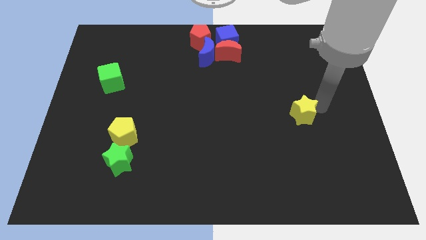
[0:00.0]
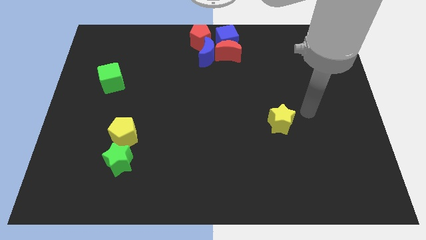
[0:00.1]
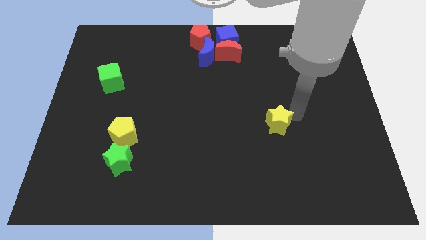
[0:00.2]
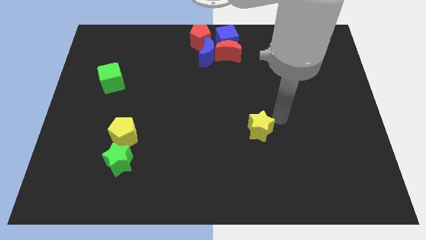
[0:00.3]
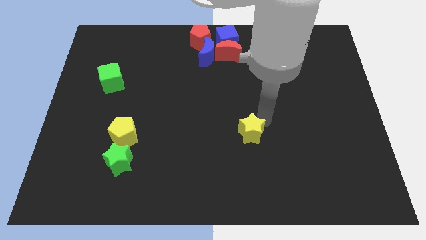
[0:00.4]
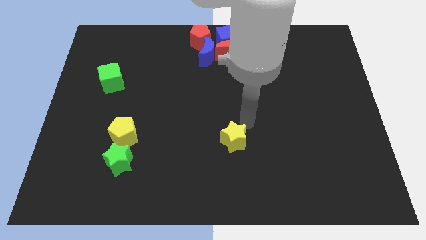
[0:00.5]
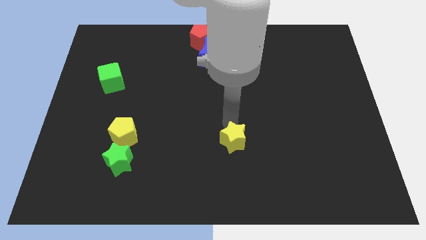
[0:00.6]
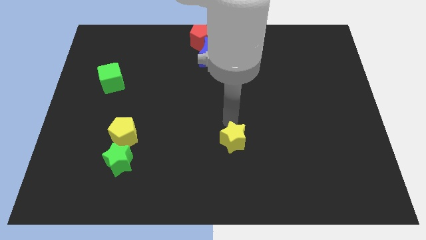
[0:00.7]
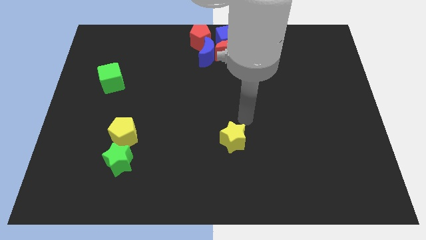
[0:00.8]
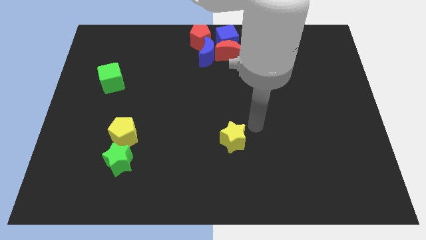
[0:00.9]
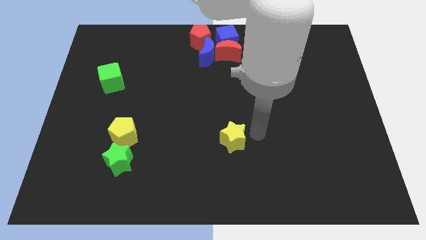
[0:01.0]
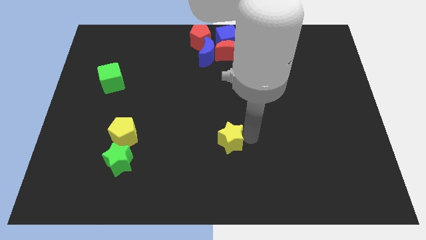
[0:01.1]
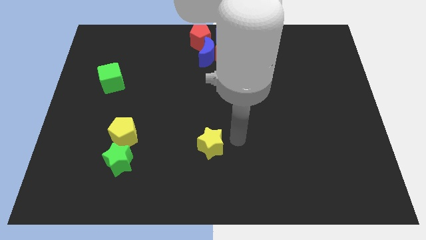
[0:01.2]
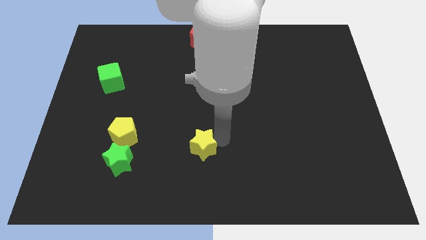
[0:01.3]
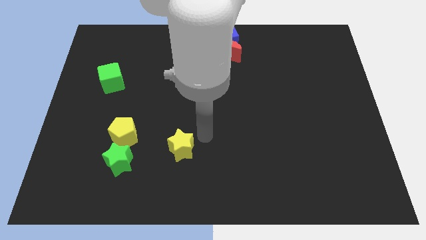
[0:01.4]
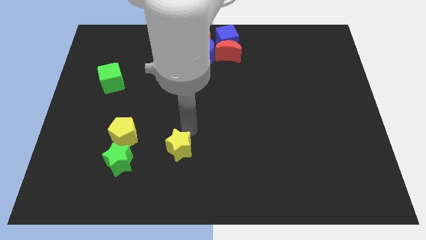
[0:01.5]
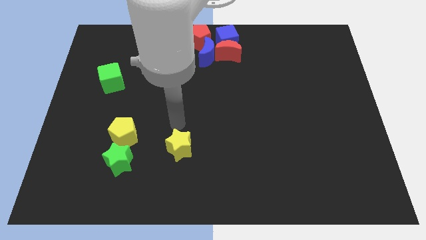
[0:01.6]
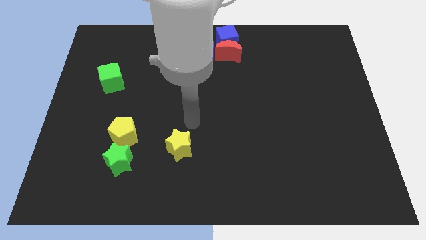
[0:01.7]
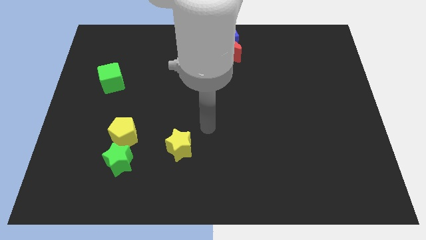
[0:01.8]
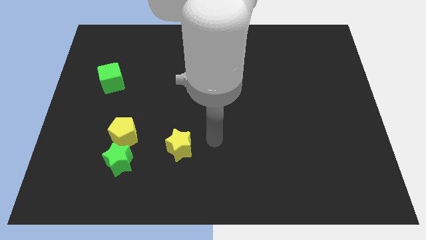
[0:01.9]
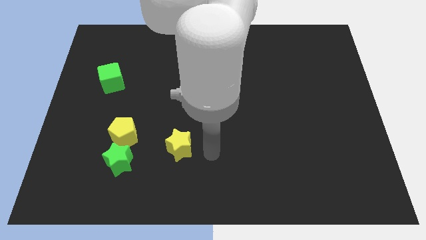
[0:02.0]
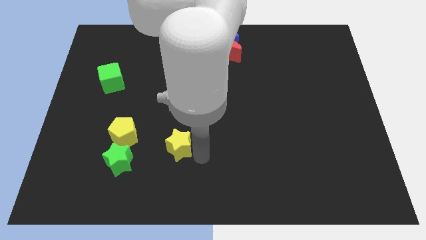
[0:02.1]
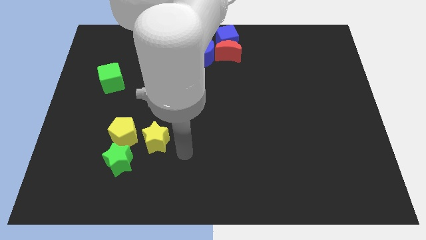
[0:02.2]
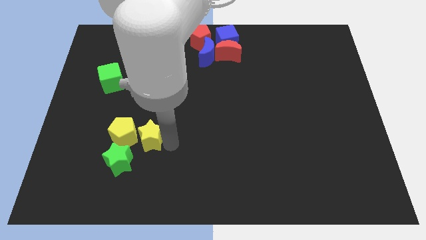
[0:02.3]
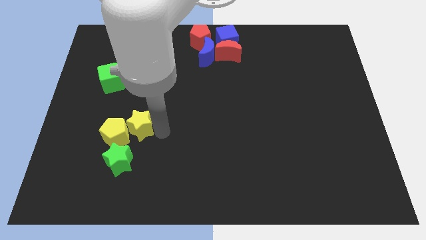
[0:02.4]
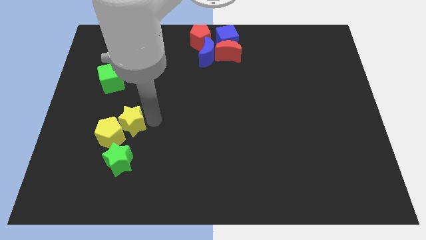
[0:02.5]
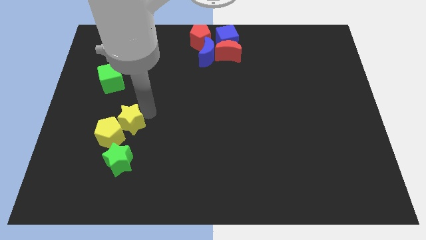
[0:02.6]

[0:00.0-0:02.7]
drag the yellow star close to the yellow pentagon

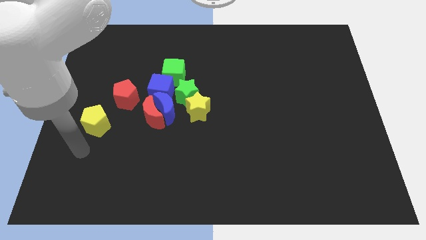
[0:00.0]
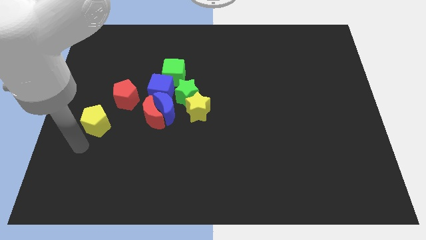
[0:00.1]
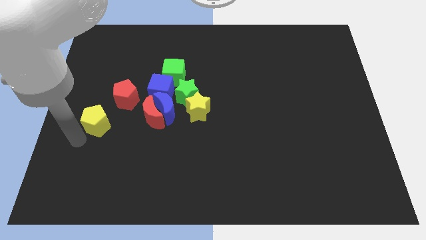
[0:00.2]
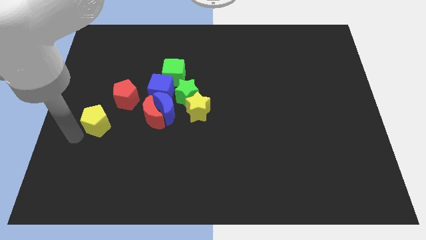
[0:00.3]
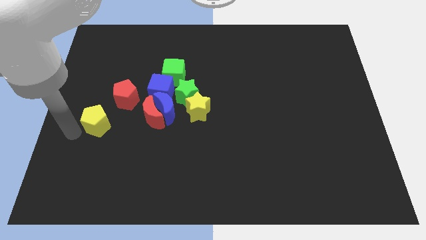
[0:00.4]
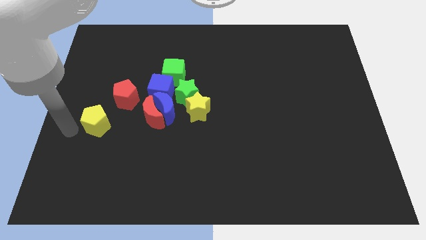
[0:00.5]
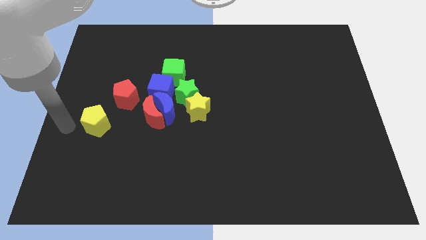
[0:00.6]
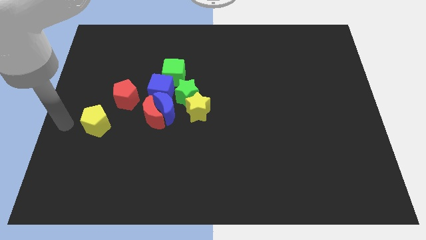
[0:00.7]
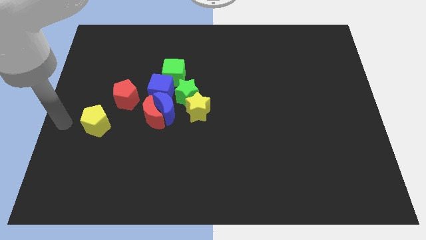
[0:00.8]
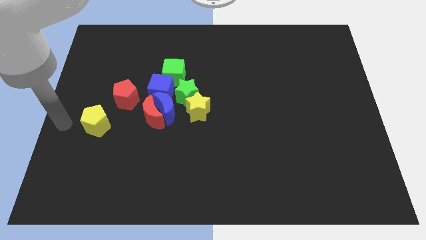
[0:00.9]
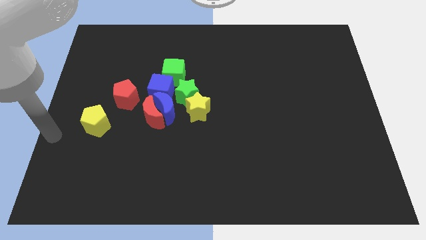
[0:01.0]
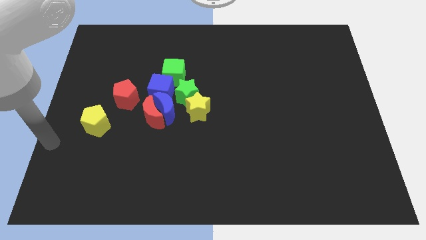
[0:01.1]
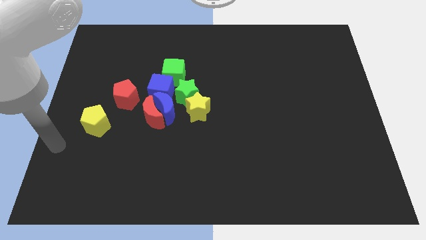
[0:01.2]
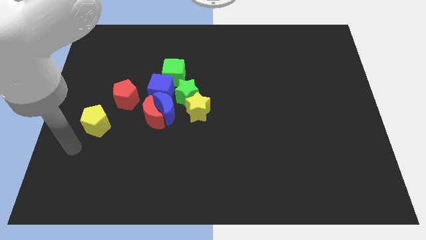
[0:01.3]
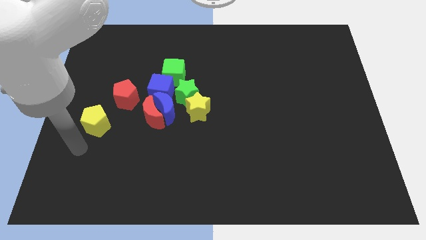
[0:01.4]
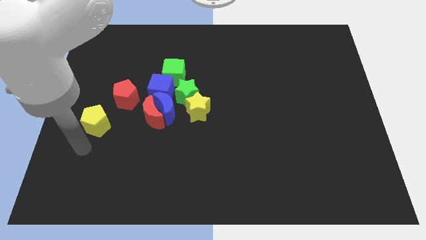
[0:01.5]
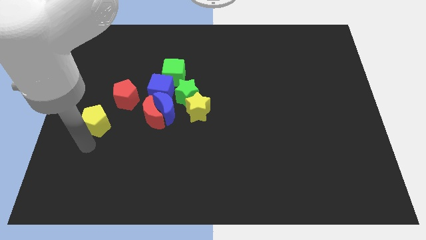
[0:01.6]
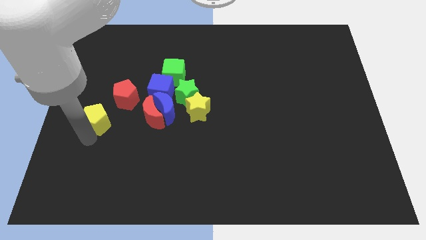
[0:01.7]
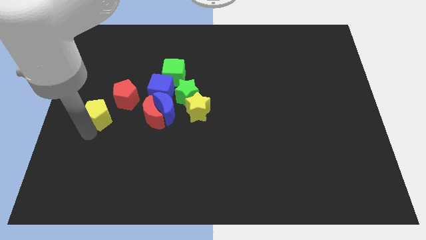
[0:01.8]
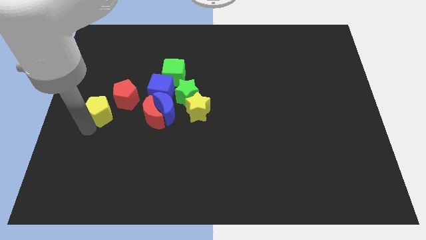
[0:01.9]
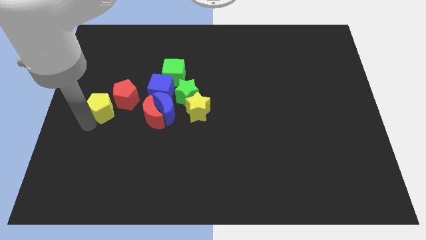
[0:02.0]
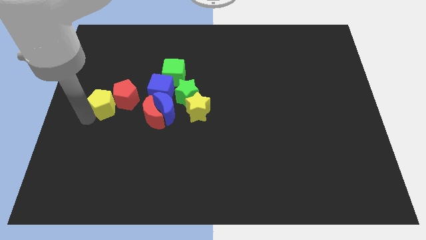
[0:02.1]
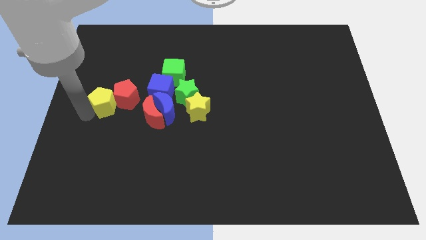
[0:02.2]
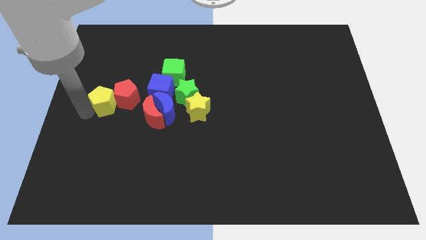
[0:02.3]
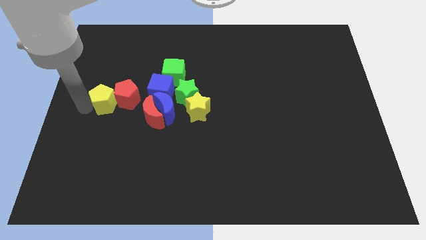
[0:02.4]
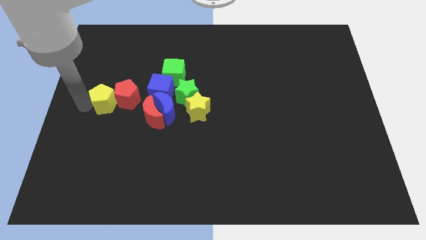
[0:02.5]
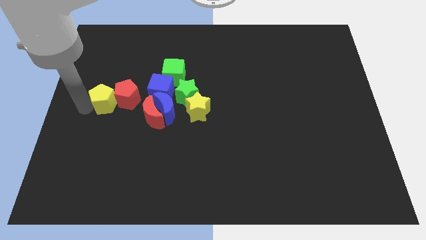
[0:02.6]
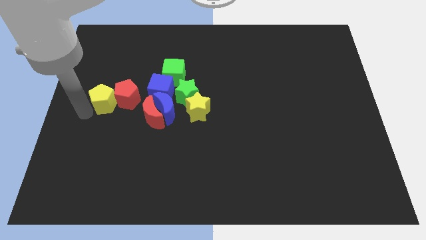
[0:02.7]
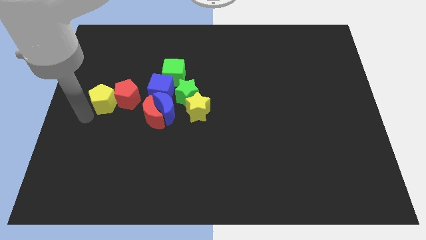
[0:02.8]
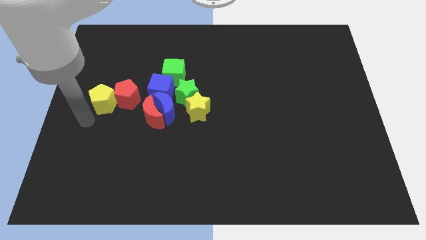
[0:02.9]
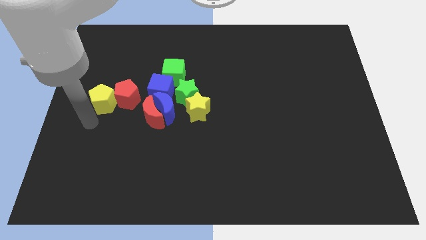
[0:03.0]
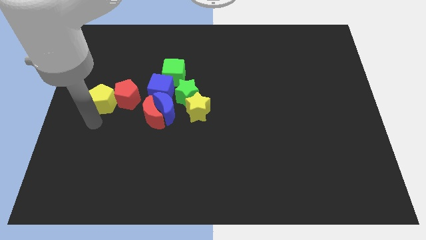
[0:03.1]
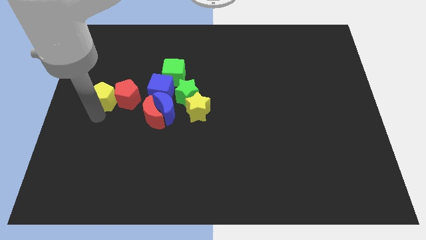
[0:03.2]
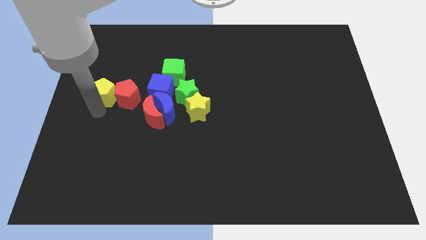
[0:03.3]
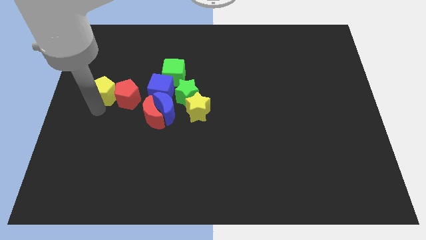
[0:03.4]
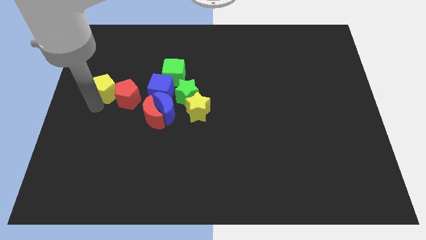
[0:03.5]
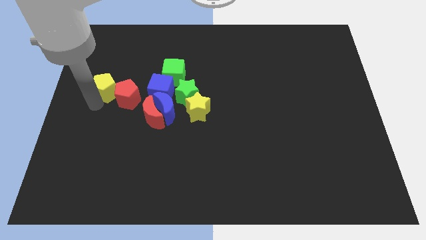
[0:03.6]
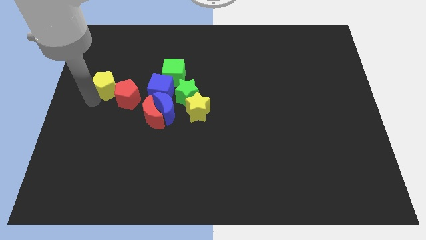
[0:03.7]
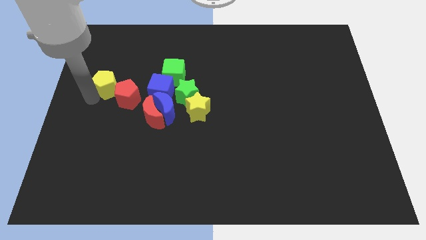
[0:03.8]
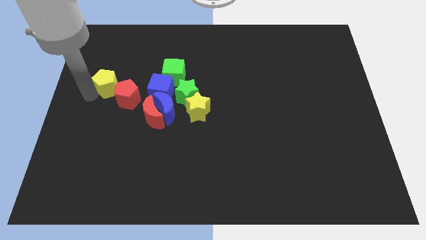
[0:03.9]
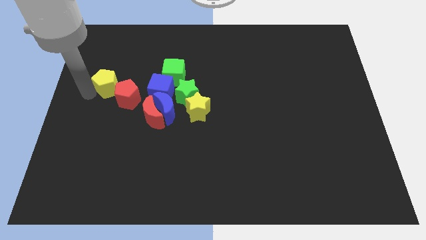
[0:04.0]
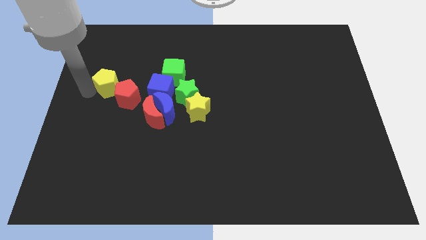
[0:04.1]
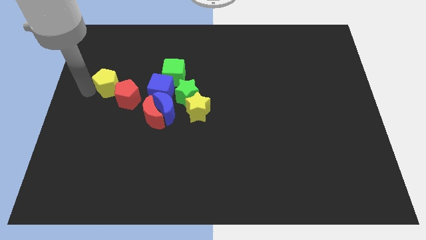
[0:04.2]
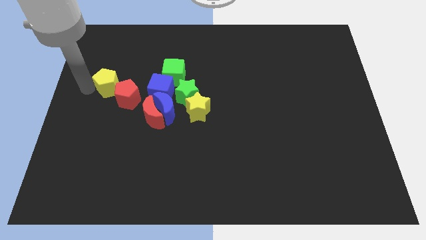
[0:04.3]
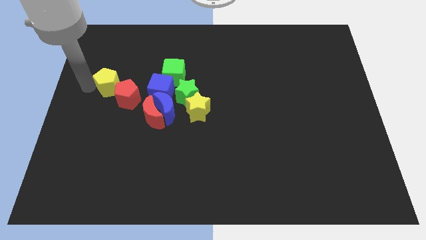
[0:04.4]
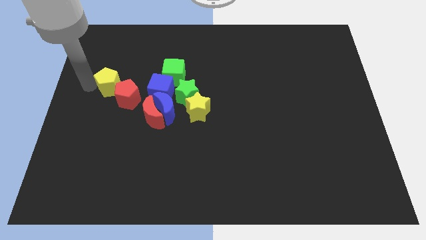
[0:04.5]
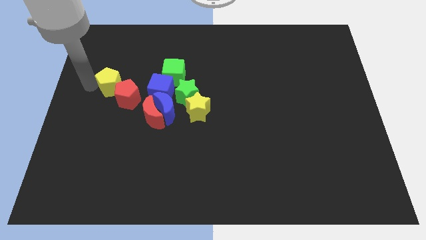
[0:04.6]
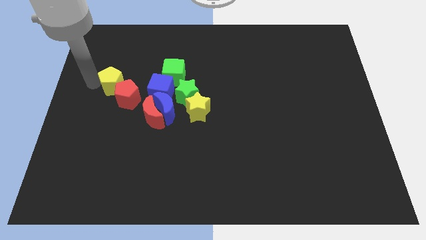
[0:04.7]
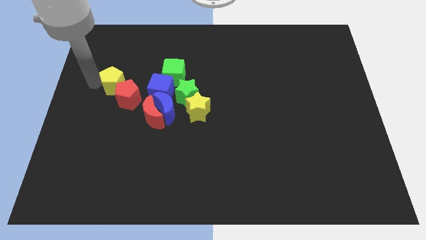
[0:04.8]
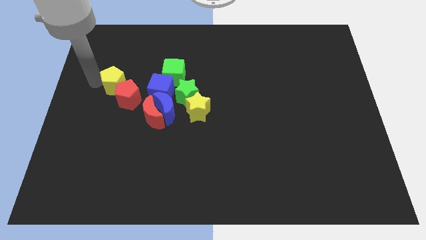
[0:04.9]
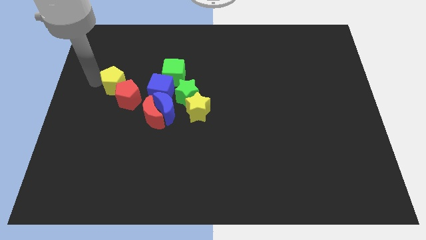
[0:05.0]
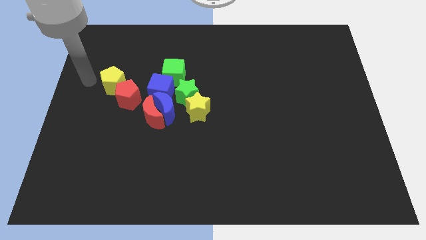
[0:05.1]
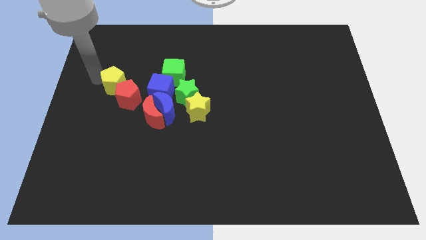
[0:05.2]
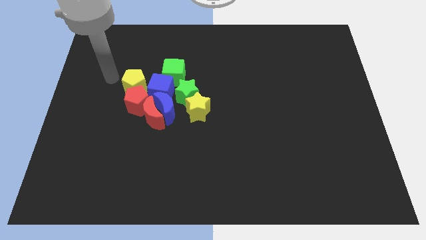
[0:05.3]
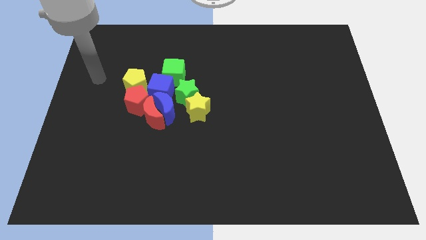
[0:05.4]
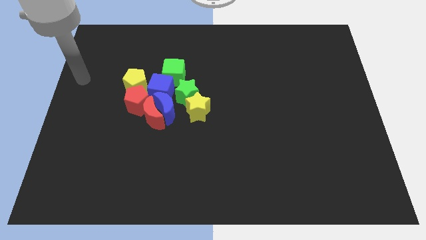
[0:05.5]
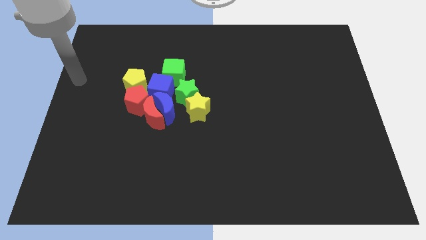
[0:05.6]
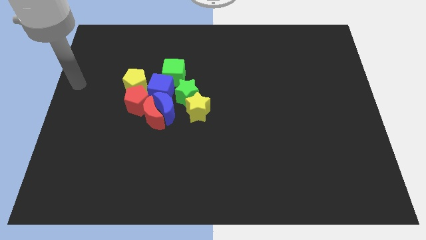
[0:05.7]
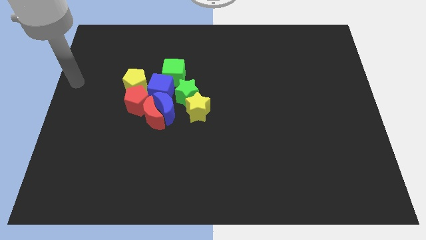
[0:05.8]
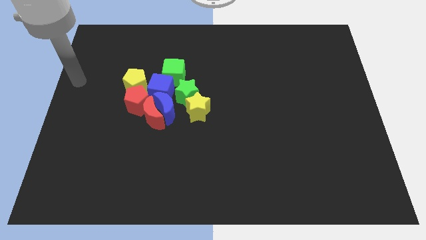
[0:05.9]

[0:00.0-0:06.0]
move the yellow pentagon above the red pentagon

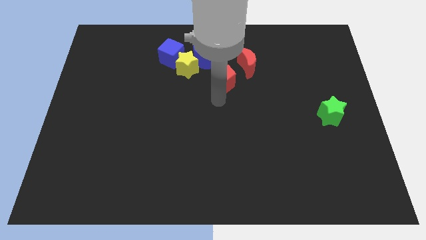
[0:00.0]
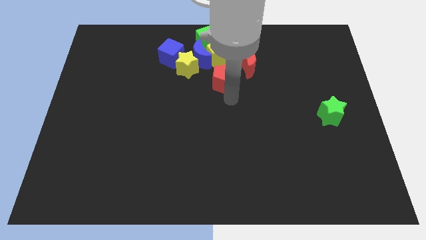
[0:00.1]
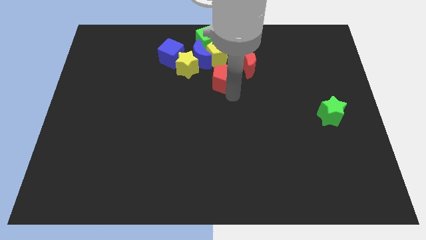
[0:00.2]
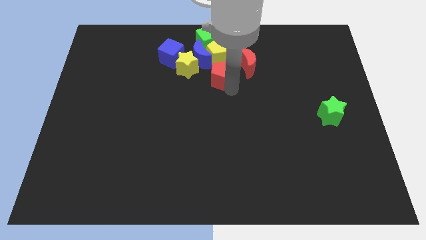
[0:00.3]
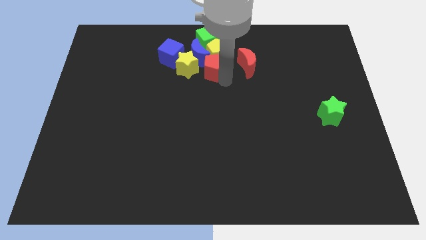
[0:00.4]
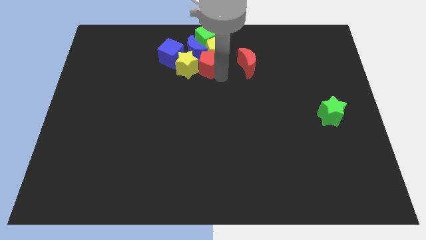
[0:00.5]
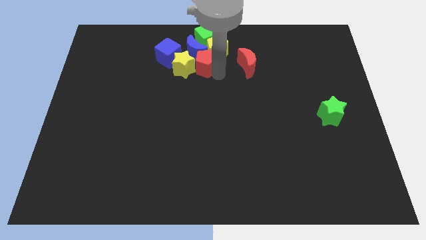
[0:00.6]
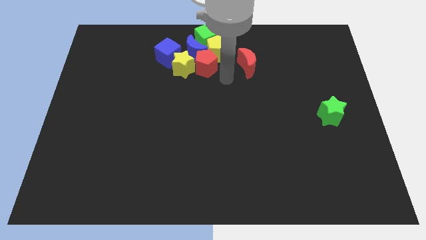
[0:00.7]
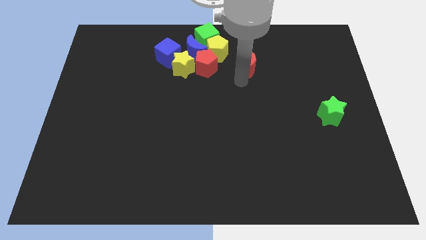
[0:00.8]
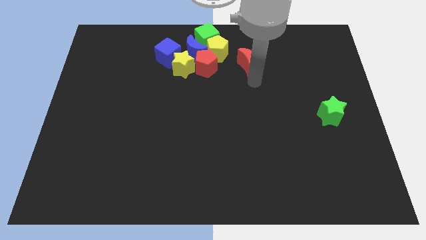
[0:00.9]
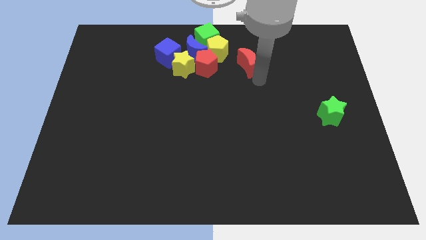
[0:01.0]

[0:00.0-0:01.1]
slide the red pentagon into the group of blocks
